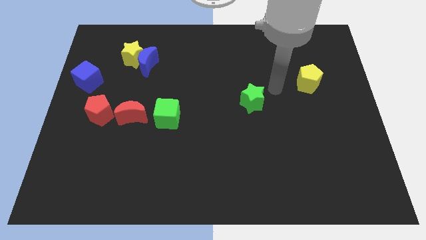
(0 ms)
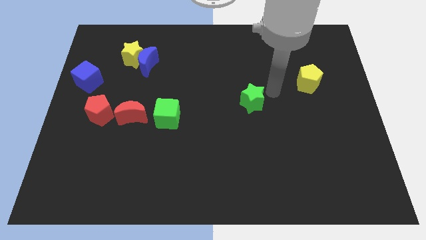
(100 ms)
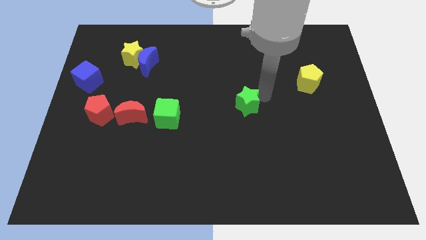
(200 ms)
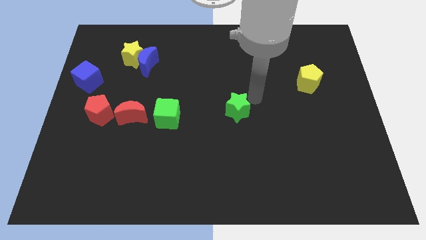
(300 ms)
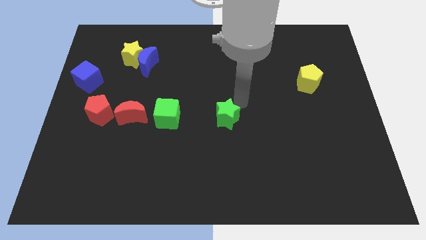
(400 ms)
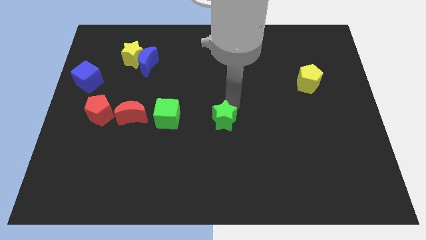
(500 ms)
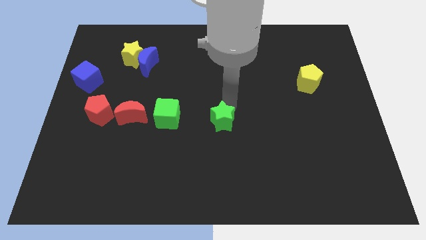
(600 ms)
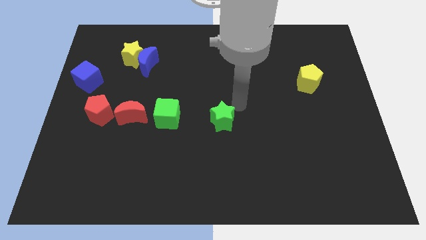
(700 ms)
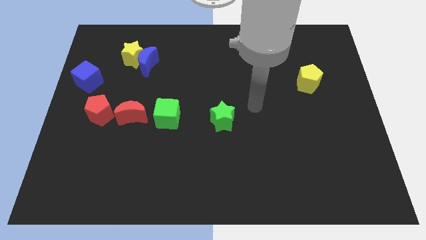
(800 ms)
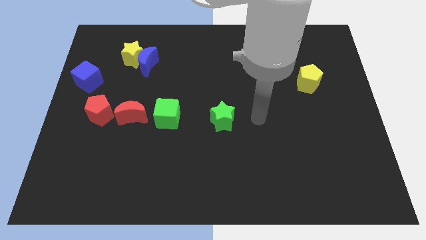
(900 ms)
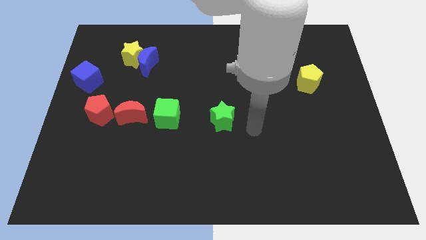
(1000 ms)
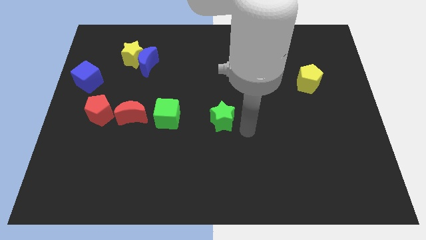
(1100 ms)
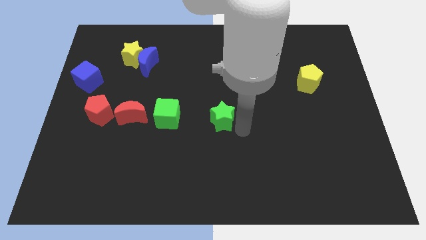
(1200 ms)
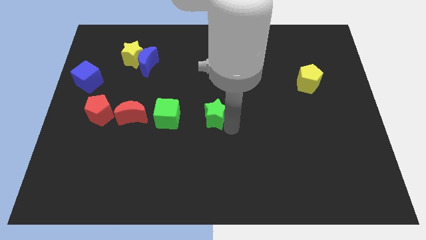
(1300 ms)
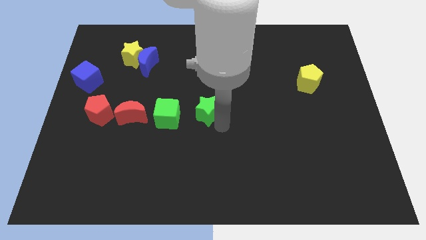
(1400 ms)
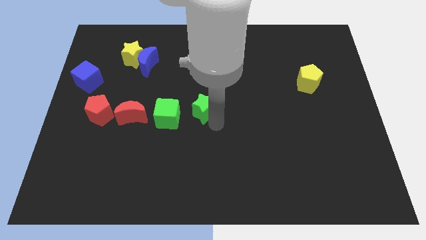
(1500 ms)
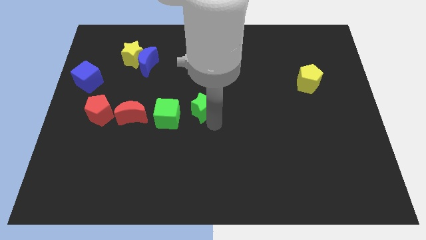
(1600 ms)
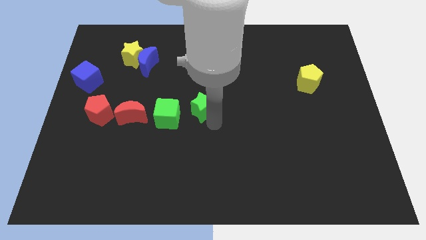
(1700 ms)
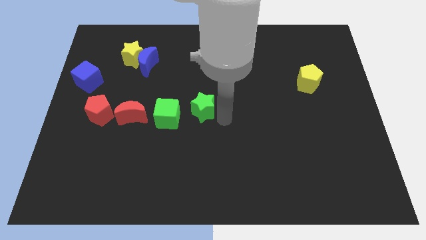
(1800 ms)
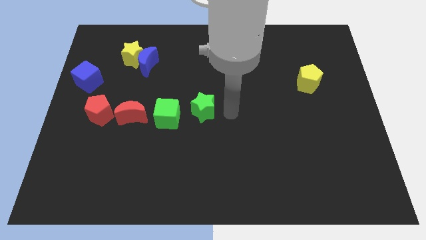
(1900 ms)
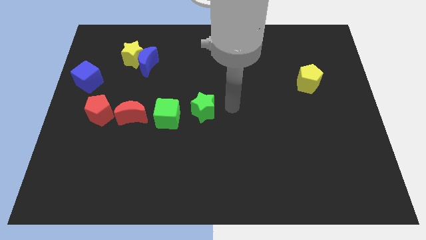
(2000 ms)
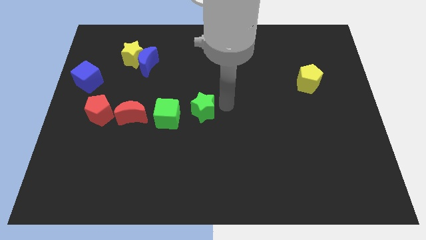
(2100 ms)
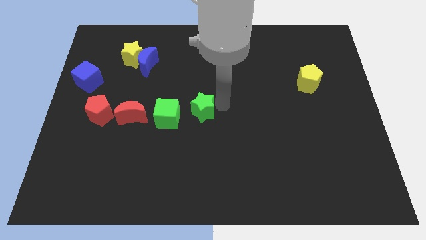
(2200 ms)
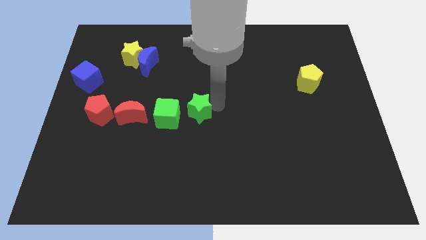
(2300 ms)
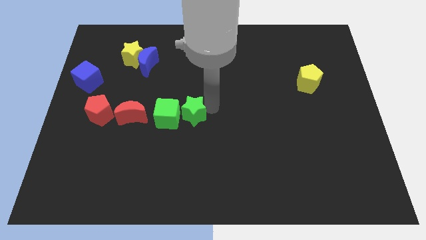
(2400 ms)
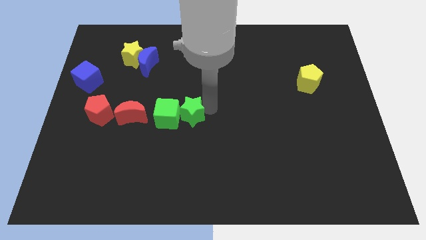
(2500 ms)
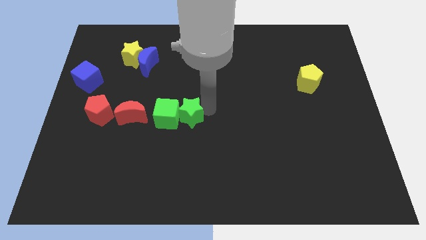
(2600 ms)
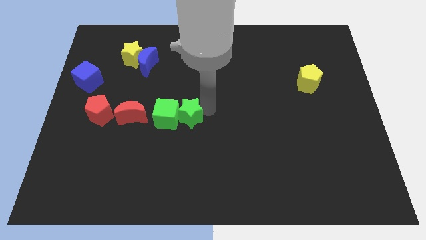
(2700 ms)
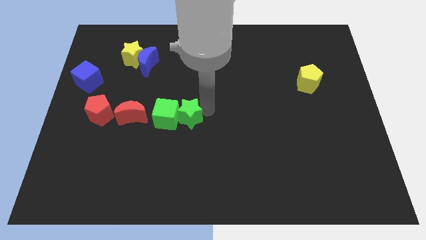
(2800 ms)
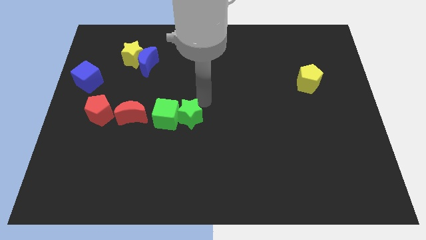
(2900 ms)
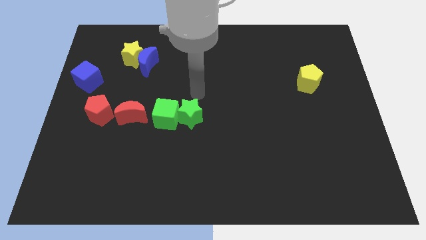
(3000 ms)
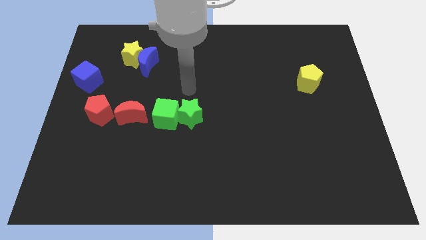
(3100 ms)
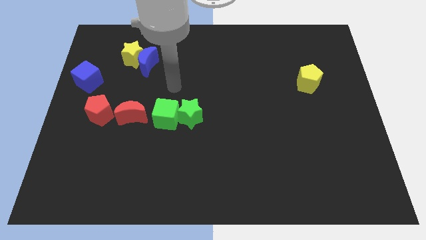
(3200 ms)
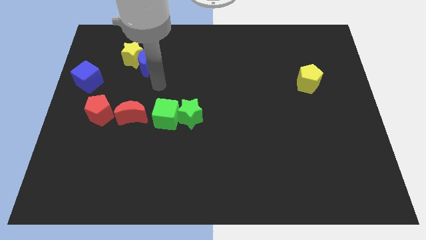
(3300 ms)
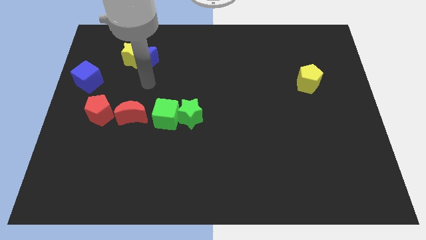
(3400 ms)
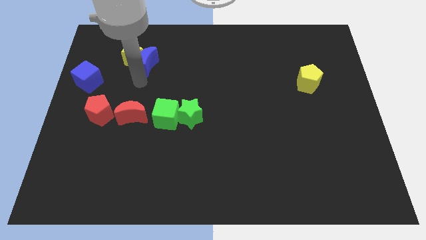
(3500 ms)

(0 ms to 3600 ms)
push the green star into the green cube

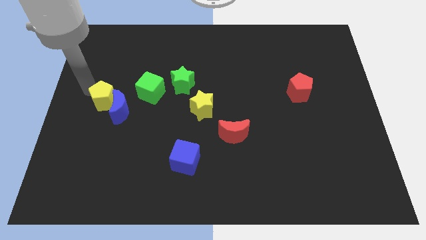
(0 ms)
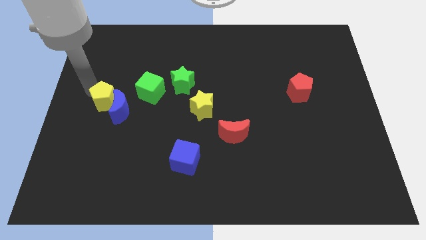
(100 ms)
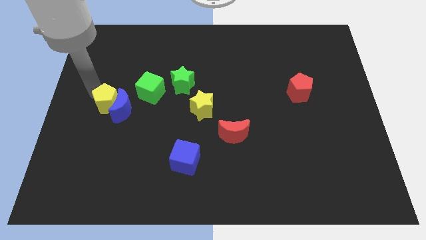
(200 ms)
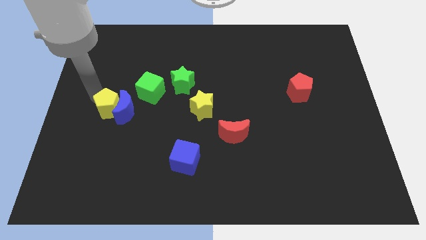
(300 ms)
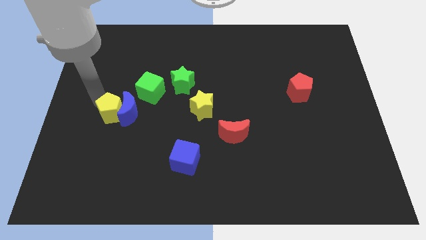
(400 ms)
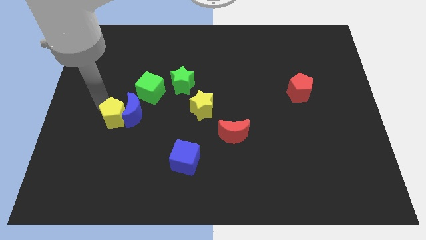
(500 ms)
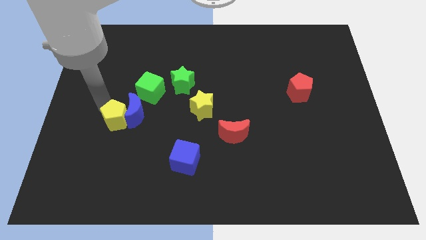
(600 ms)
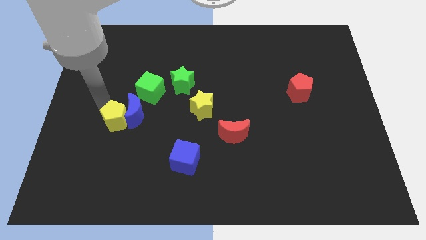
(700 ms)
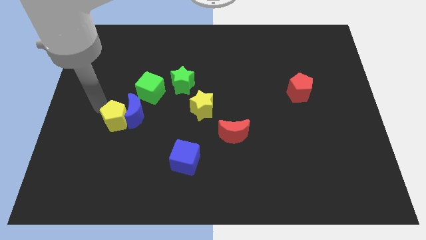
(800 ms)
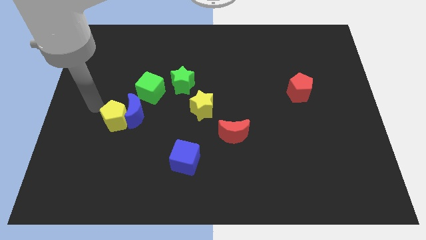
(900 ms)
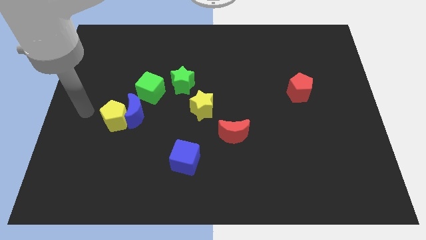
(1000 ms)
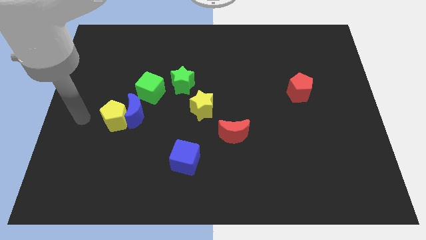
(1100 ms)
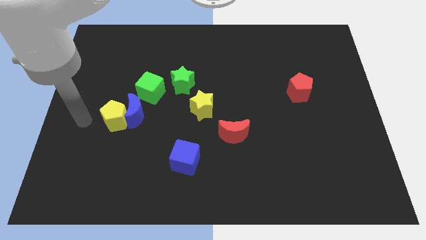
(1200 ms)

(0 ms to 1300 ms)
push the yellow pentagon into the blue crescent towards the bottom

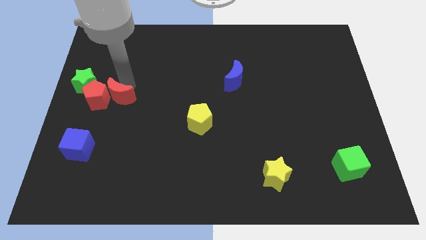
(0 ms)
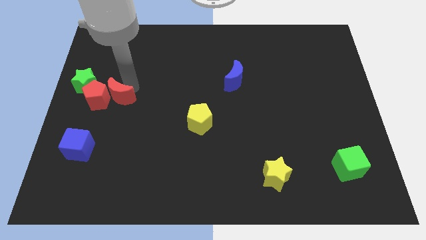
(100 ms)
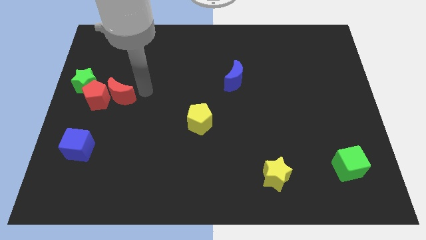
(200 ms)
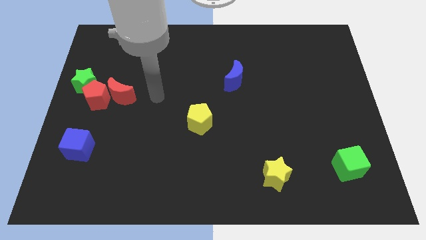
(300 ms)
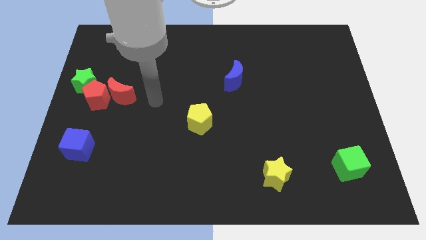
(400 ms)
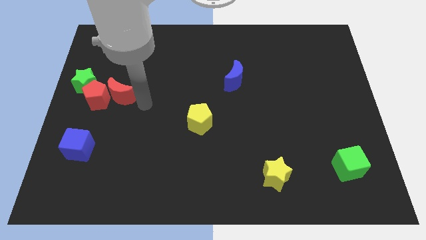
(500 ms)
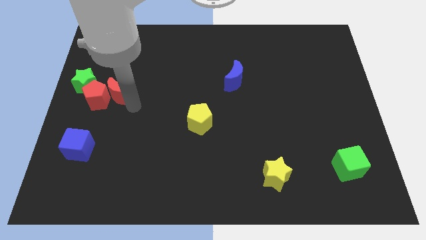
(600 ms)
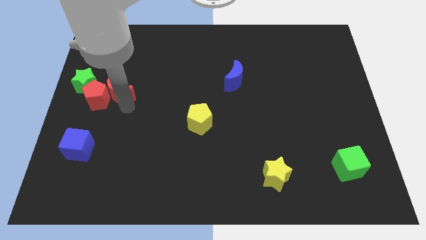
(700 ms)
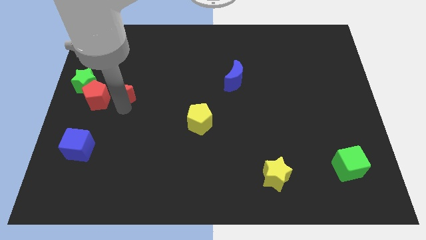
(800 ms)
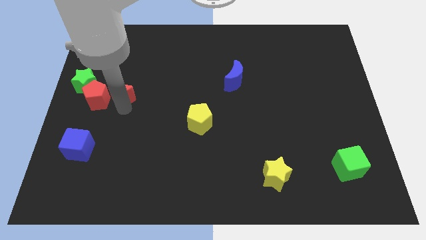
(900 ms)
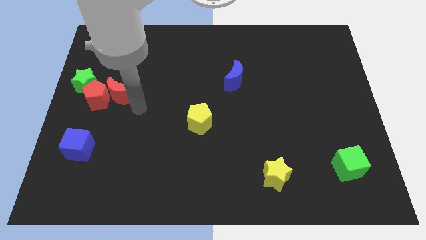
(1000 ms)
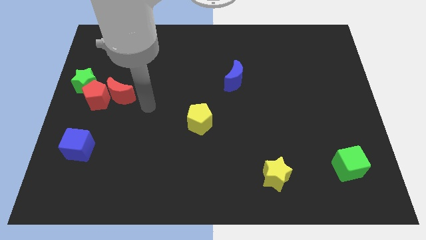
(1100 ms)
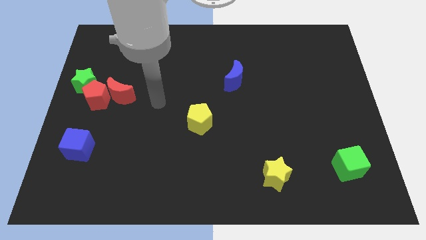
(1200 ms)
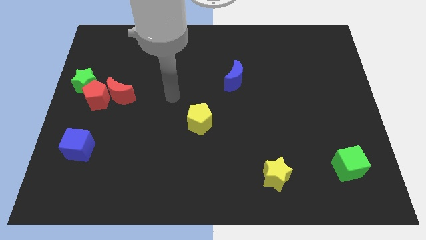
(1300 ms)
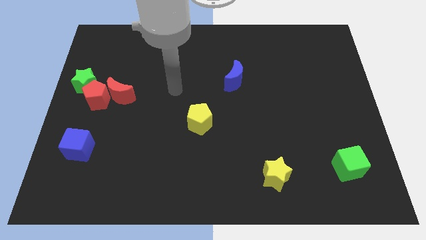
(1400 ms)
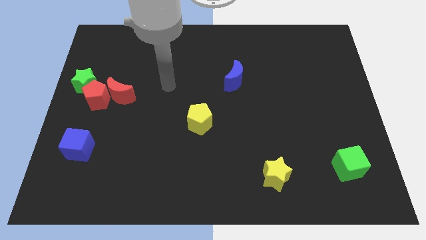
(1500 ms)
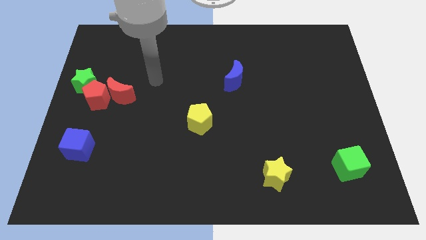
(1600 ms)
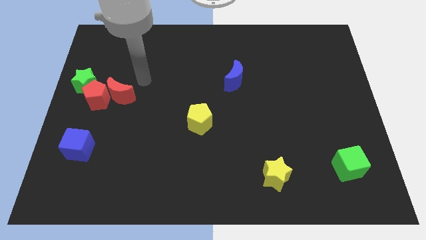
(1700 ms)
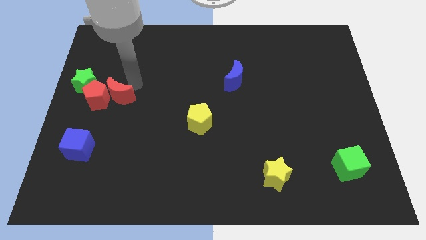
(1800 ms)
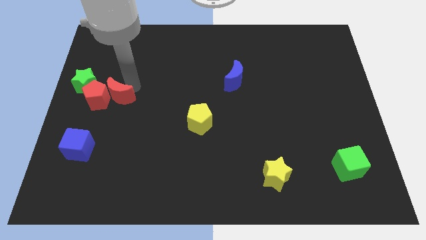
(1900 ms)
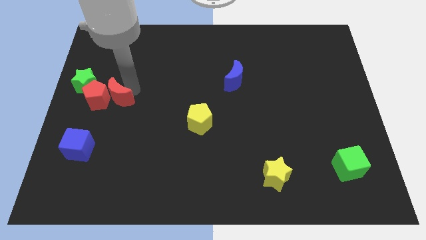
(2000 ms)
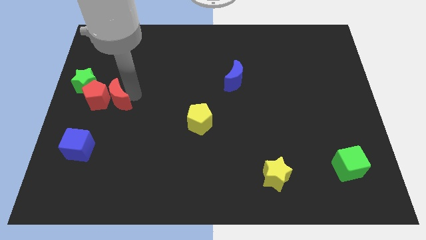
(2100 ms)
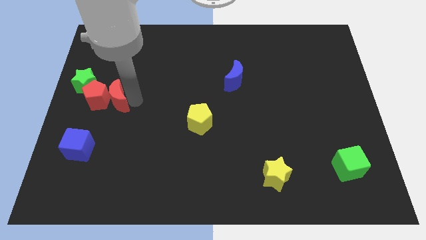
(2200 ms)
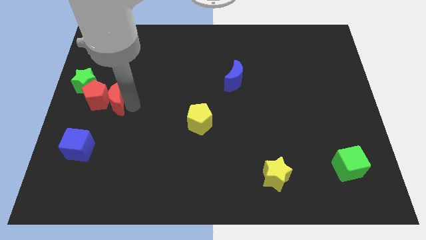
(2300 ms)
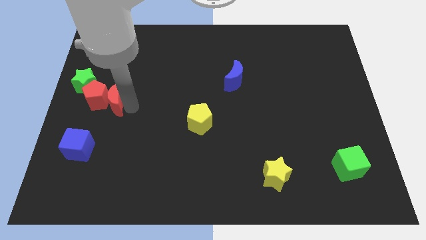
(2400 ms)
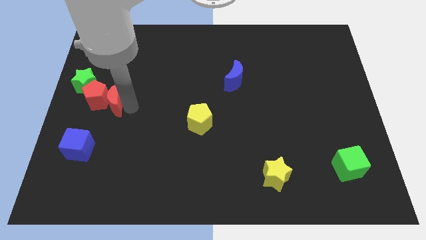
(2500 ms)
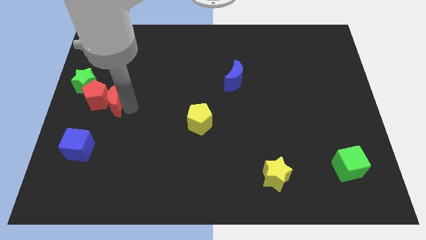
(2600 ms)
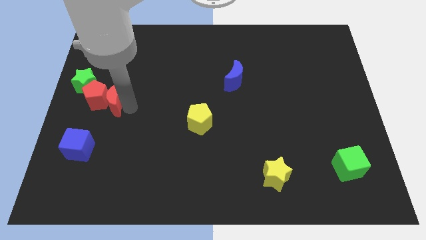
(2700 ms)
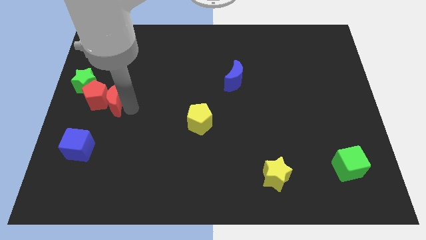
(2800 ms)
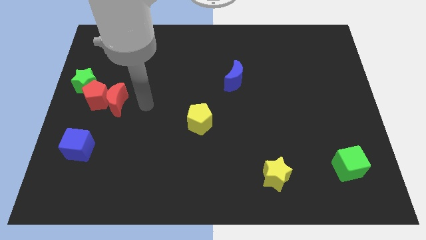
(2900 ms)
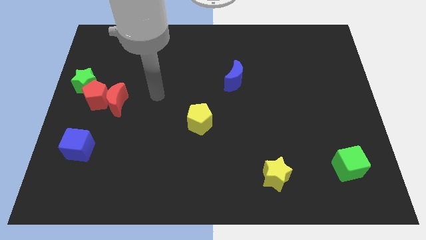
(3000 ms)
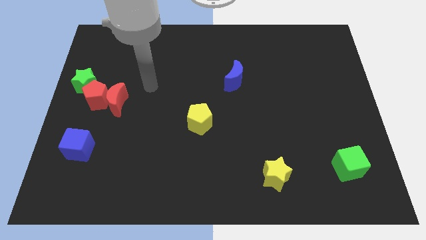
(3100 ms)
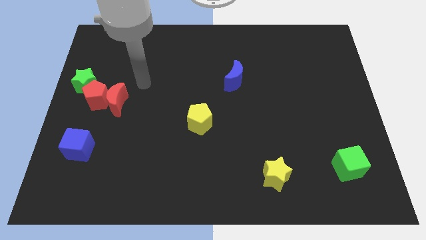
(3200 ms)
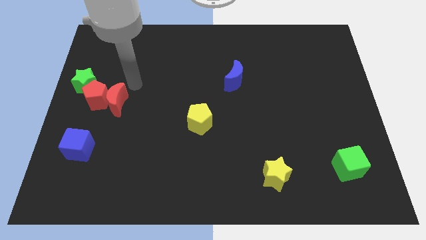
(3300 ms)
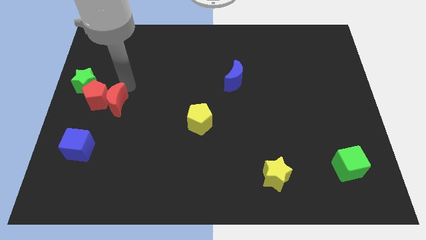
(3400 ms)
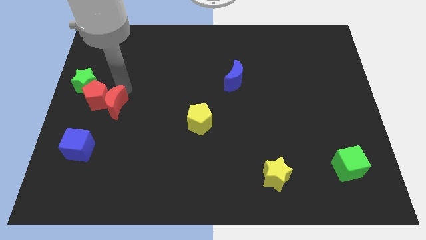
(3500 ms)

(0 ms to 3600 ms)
place the red moon beside red pentagon

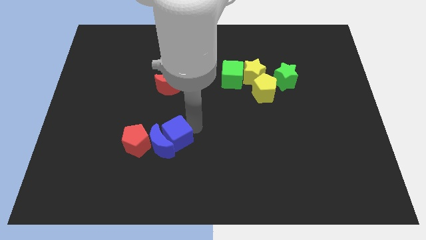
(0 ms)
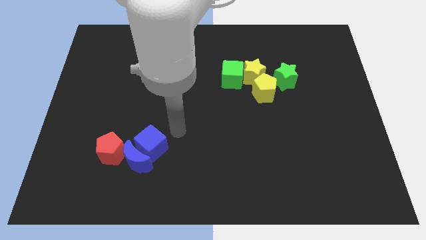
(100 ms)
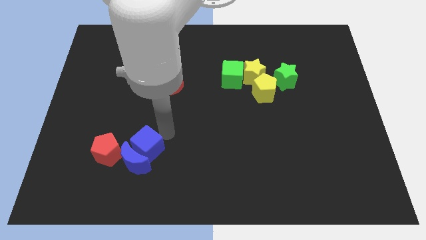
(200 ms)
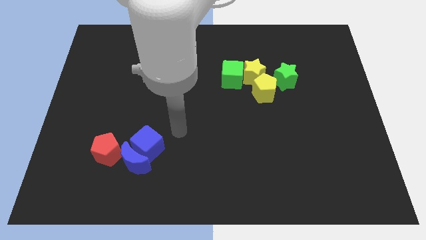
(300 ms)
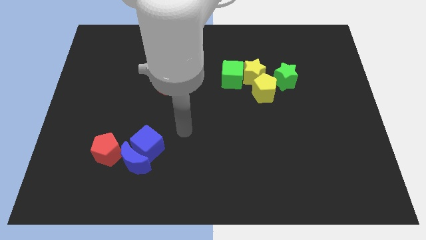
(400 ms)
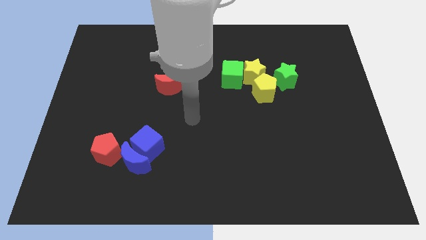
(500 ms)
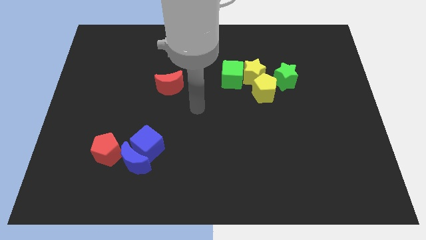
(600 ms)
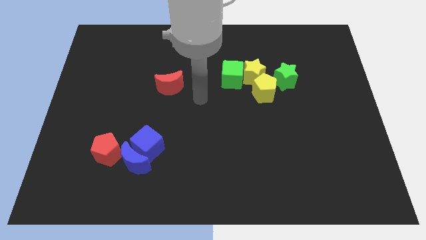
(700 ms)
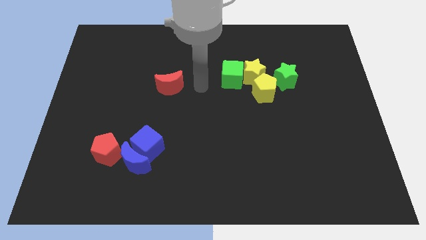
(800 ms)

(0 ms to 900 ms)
push blue cube towards red pentagon
